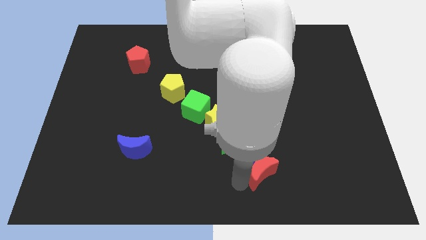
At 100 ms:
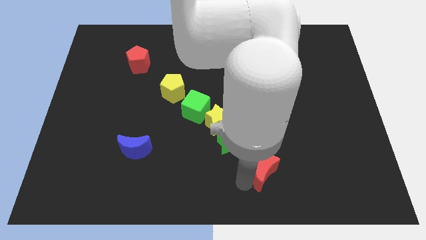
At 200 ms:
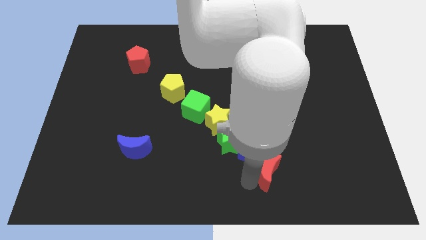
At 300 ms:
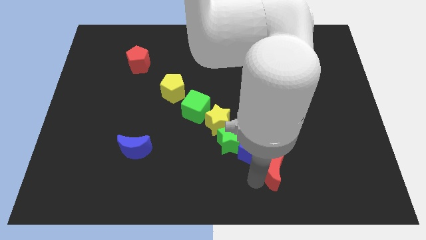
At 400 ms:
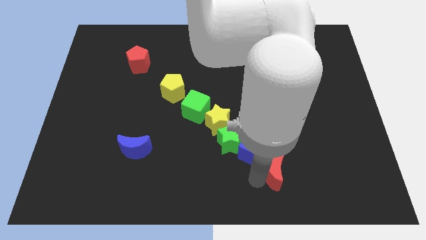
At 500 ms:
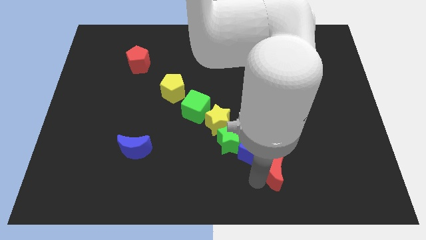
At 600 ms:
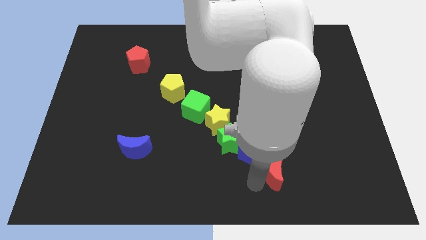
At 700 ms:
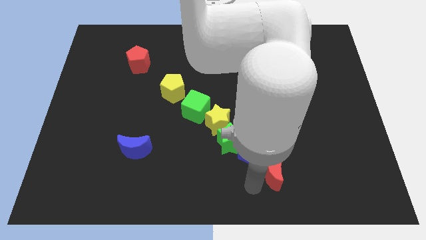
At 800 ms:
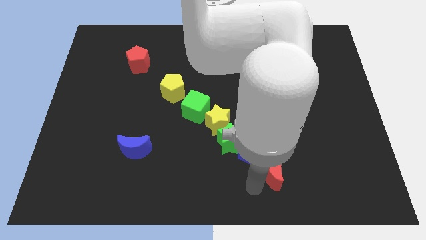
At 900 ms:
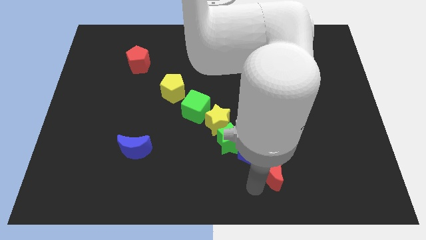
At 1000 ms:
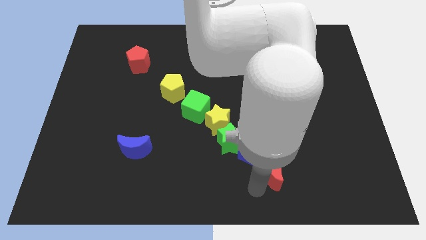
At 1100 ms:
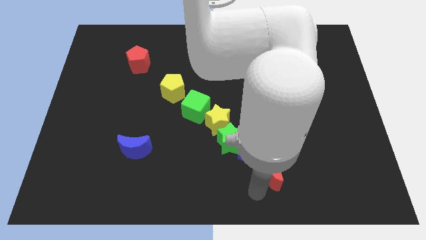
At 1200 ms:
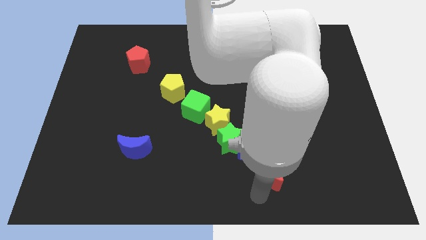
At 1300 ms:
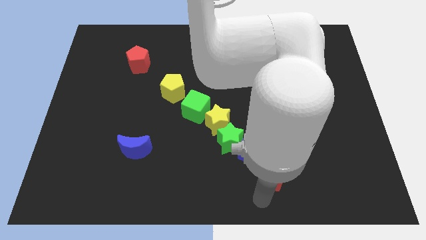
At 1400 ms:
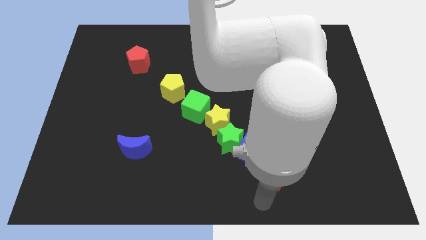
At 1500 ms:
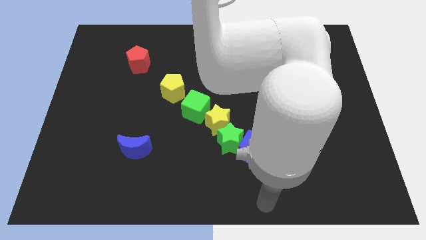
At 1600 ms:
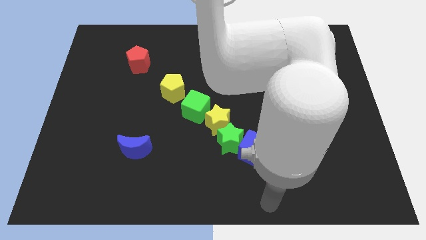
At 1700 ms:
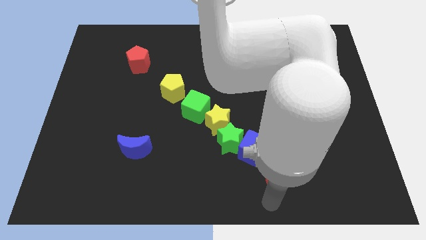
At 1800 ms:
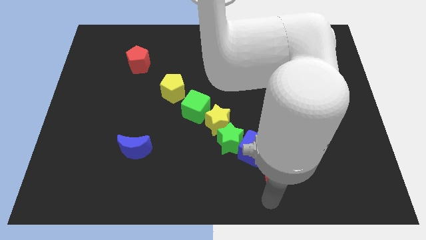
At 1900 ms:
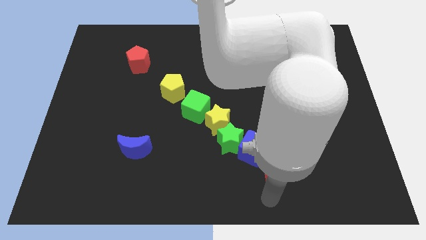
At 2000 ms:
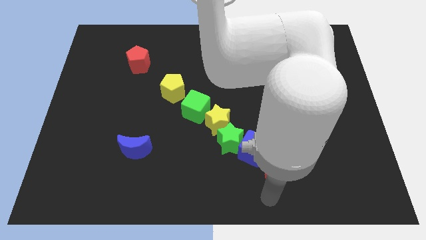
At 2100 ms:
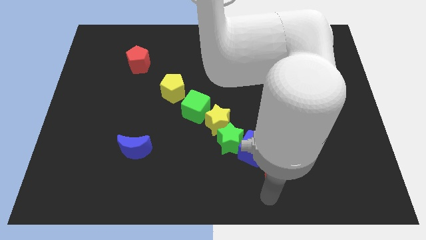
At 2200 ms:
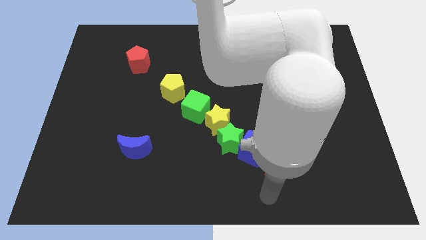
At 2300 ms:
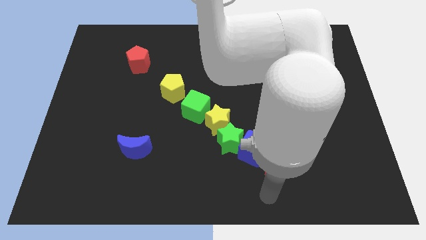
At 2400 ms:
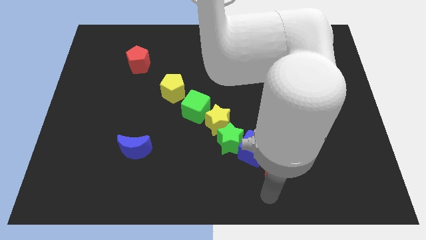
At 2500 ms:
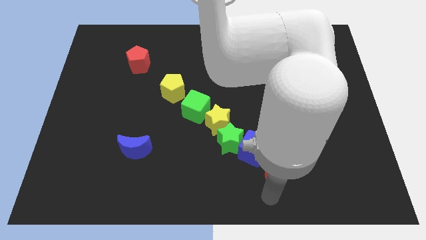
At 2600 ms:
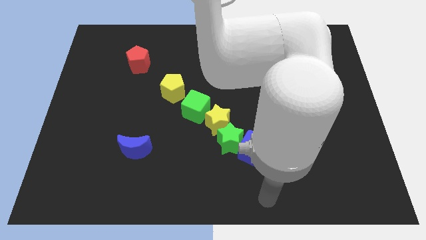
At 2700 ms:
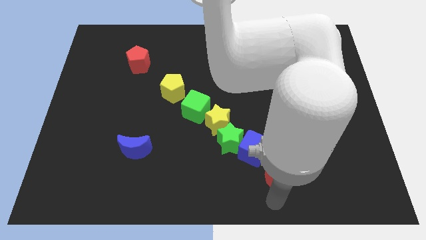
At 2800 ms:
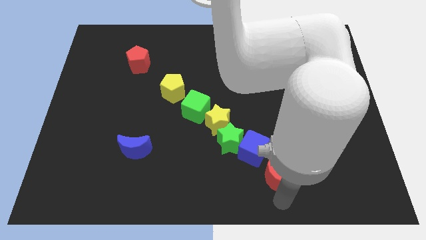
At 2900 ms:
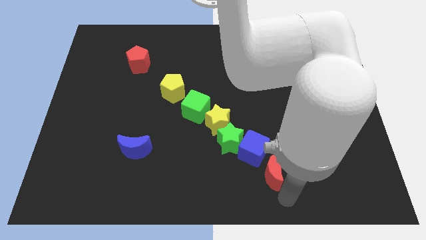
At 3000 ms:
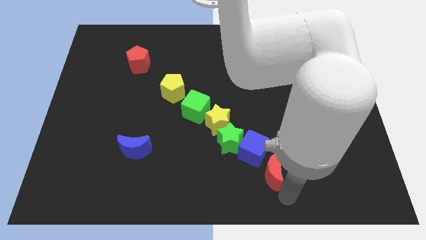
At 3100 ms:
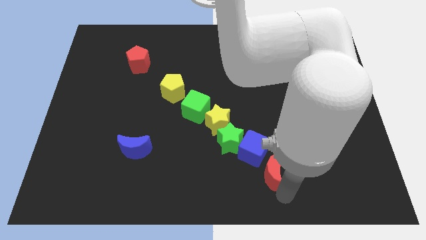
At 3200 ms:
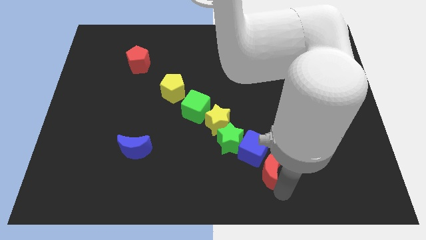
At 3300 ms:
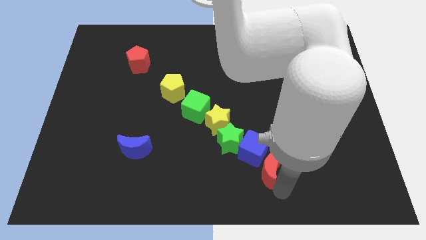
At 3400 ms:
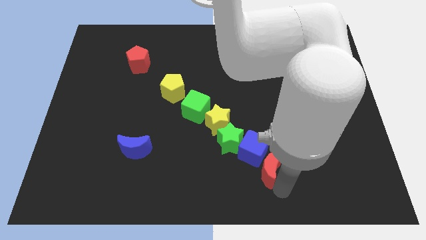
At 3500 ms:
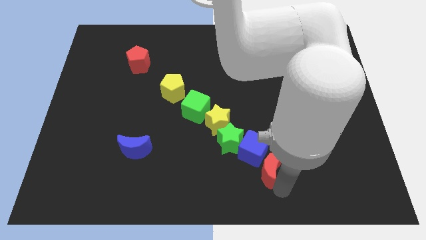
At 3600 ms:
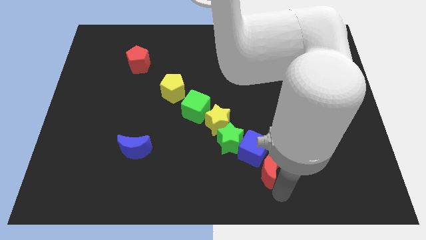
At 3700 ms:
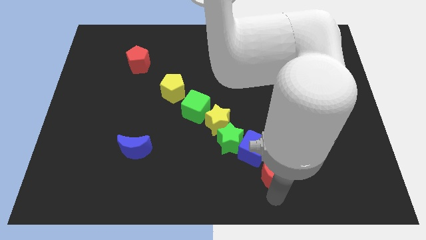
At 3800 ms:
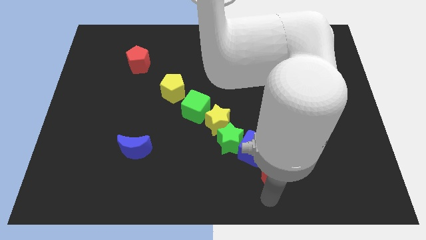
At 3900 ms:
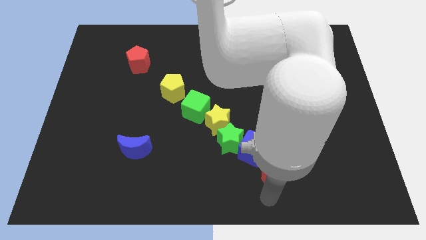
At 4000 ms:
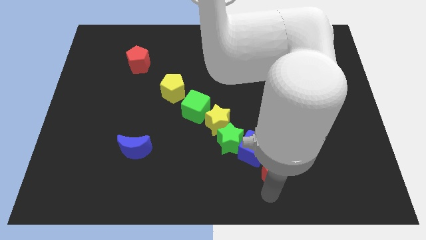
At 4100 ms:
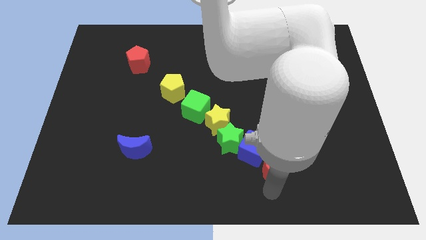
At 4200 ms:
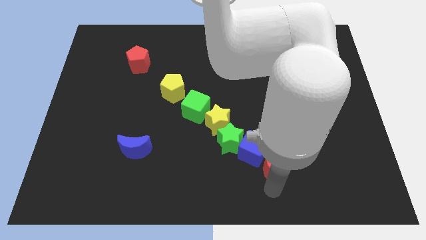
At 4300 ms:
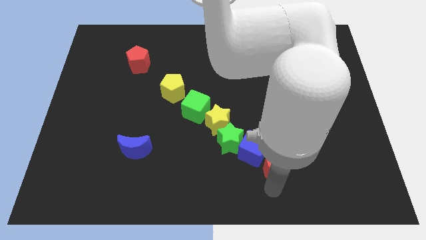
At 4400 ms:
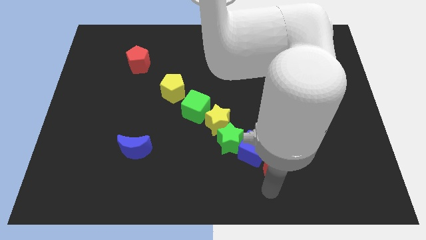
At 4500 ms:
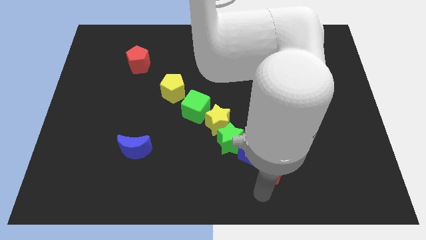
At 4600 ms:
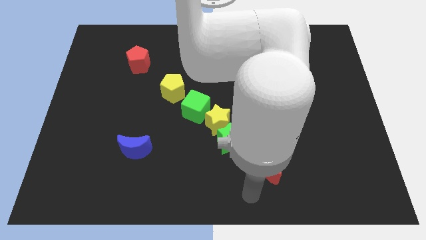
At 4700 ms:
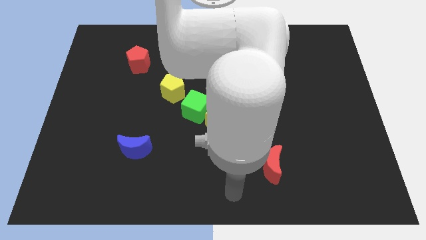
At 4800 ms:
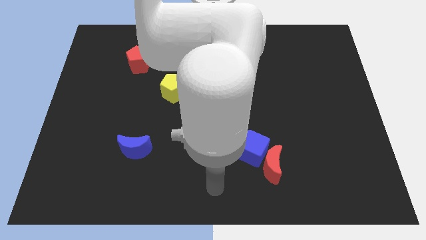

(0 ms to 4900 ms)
place the red crescent parallel to the blue cube

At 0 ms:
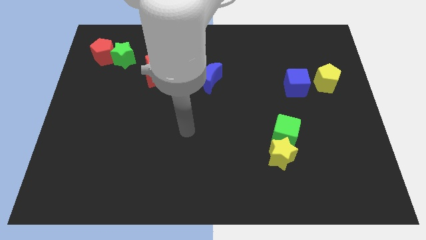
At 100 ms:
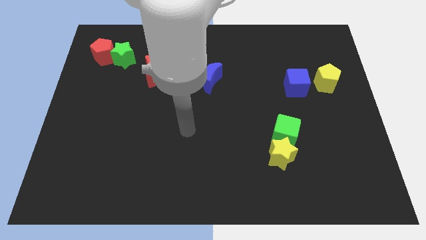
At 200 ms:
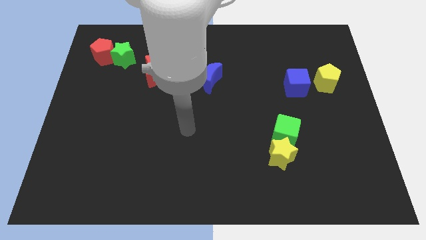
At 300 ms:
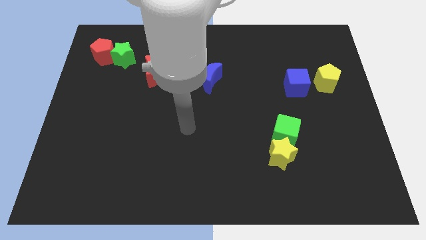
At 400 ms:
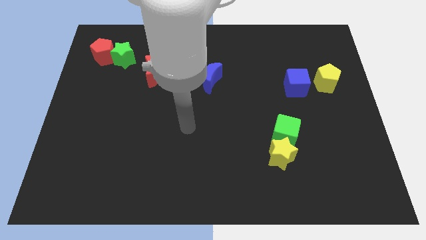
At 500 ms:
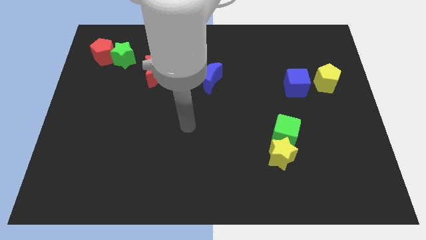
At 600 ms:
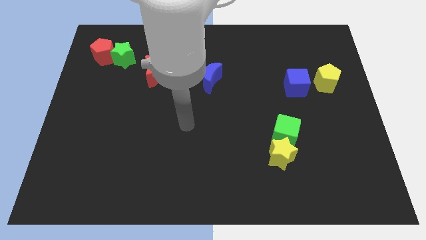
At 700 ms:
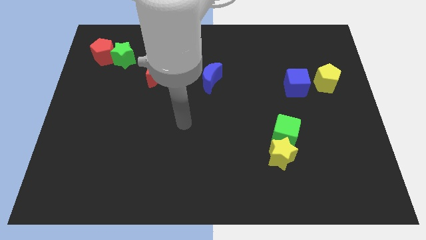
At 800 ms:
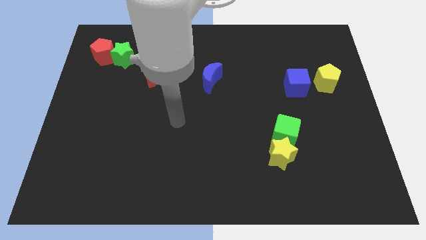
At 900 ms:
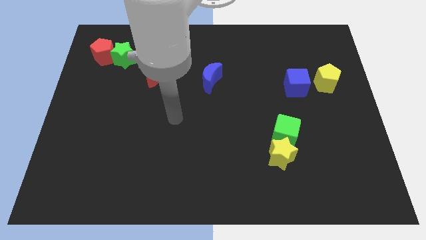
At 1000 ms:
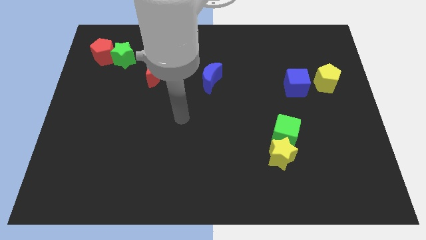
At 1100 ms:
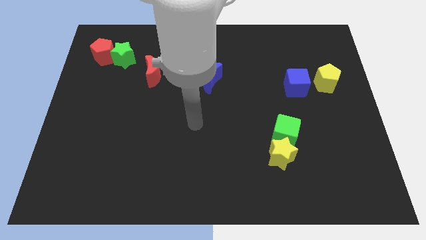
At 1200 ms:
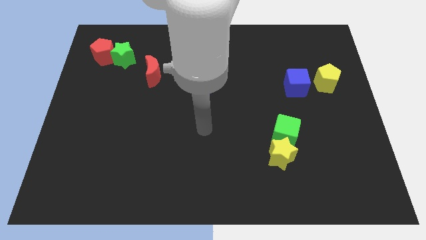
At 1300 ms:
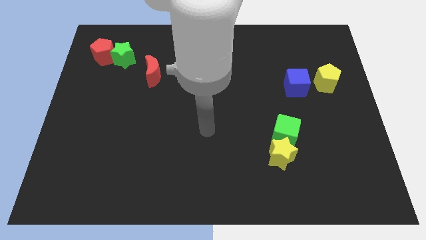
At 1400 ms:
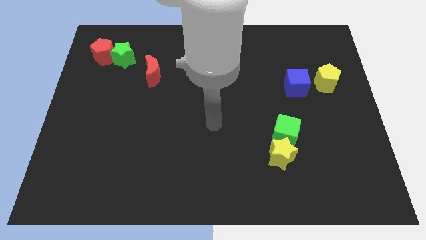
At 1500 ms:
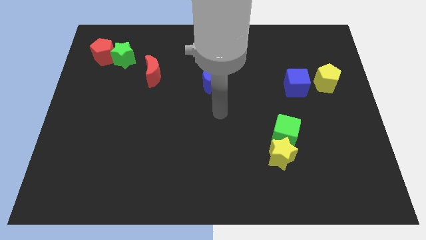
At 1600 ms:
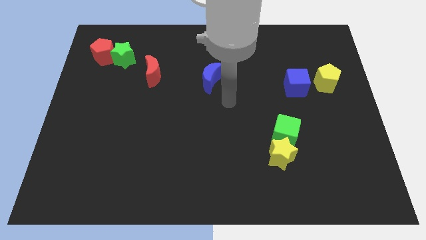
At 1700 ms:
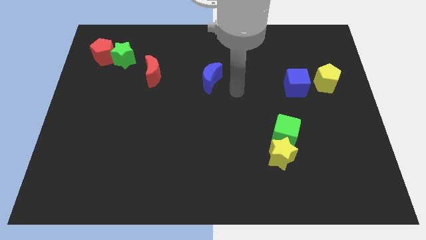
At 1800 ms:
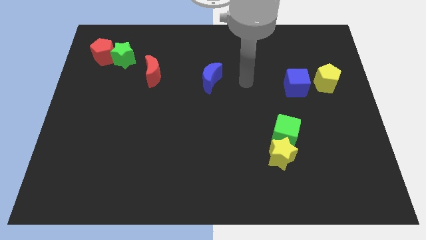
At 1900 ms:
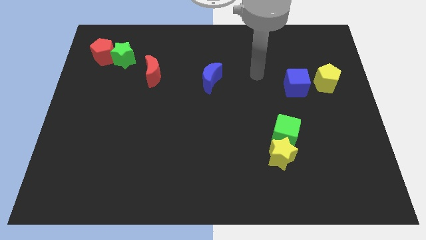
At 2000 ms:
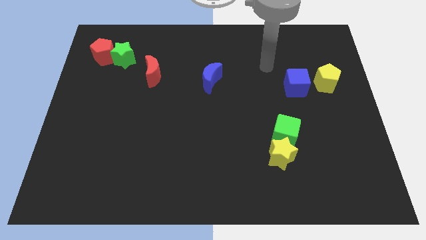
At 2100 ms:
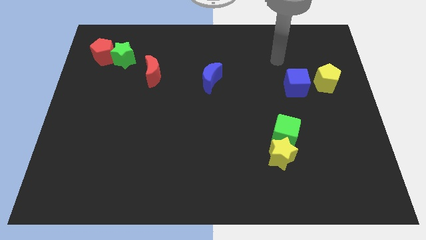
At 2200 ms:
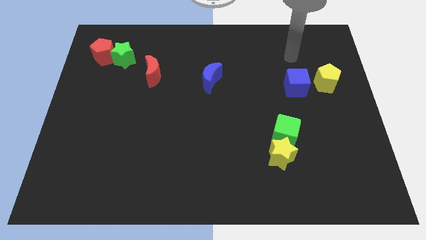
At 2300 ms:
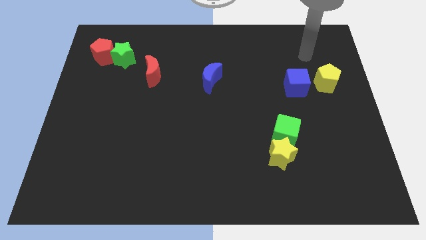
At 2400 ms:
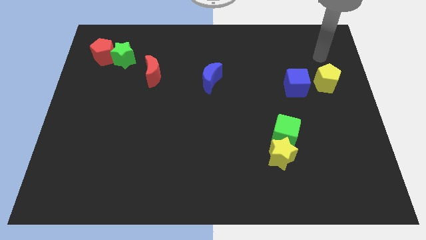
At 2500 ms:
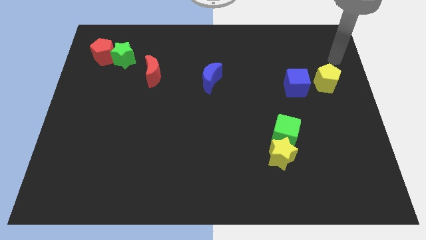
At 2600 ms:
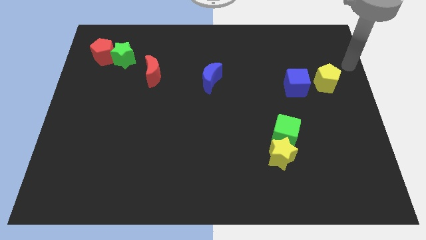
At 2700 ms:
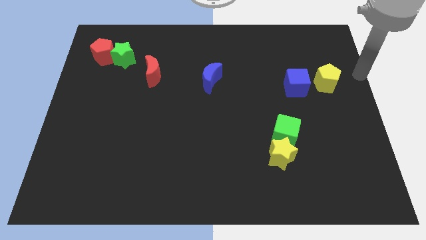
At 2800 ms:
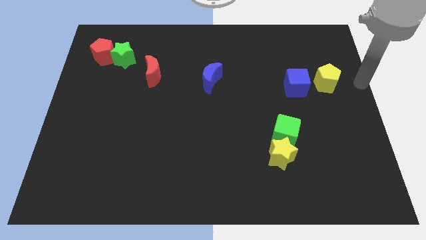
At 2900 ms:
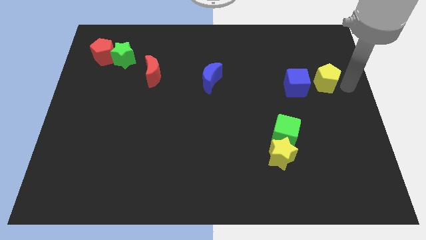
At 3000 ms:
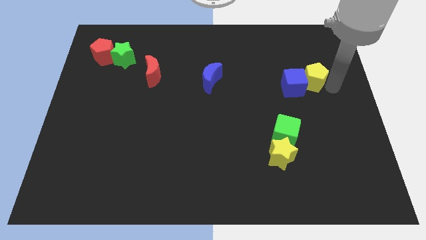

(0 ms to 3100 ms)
slide the yellow pentagon into the right side of the blue cube

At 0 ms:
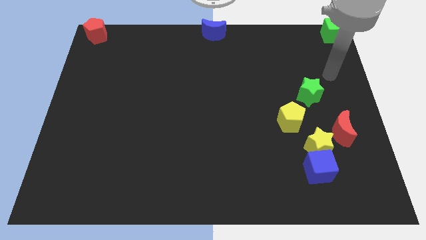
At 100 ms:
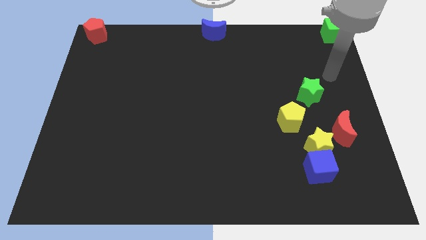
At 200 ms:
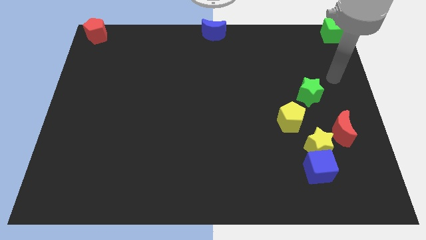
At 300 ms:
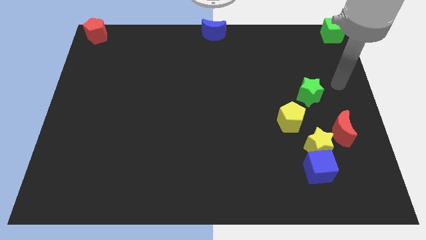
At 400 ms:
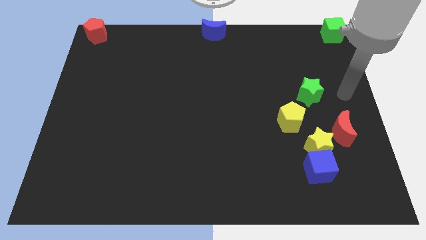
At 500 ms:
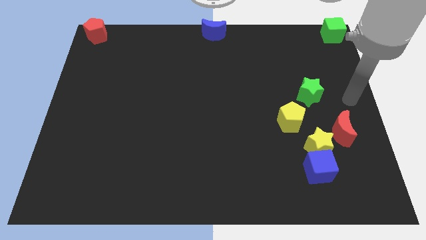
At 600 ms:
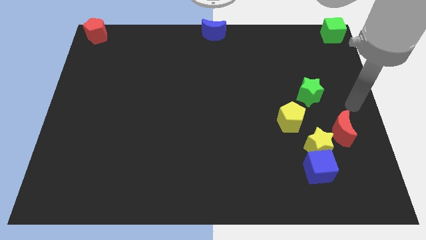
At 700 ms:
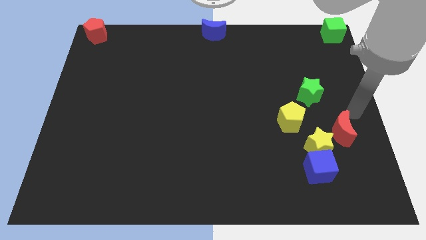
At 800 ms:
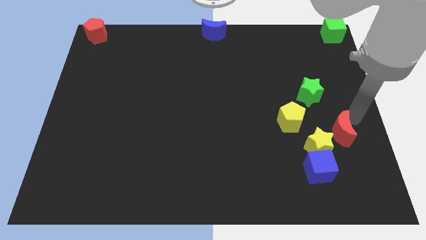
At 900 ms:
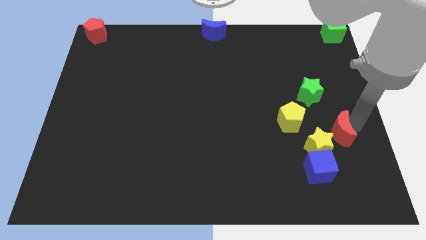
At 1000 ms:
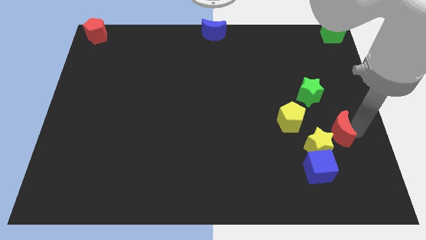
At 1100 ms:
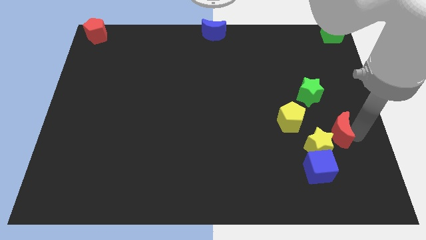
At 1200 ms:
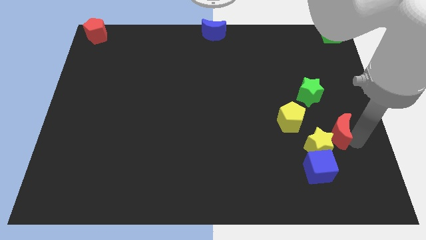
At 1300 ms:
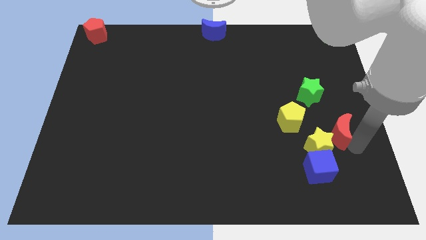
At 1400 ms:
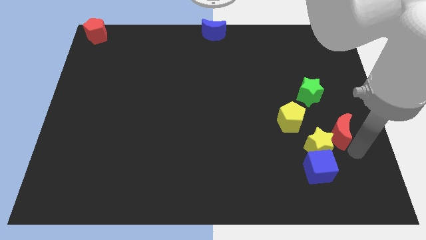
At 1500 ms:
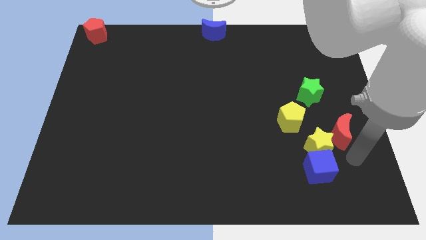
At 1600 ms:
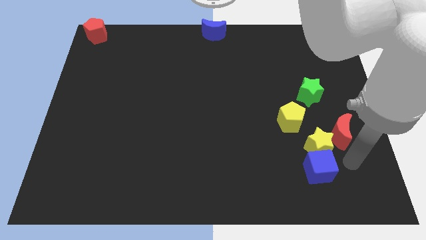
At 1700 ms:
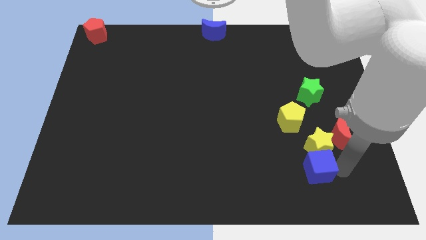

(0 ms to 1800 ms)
place the arm to the right of the blue cube
